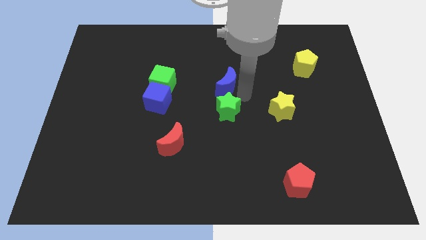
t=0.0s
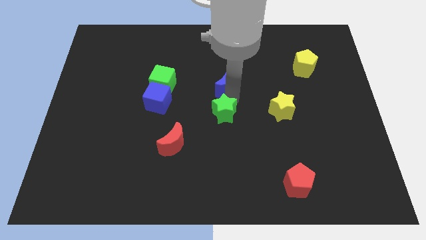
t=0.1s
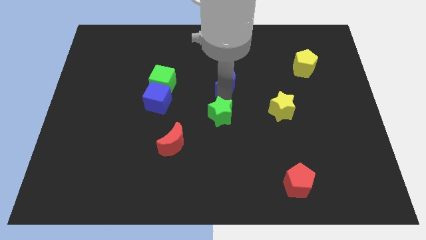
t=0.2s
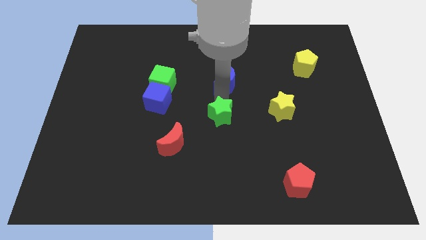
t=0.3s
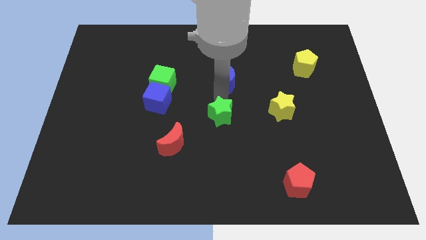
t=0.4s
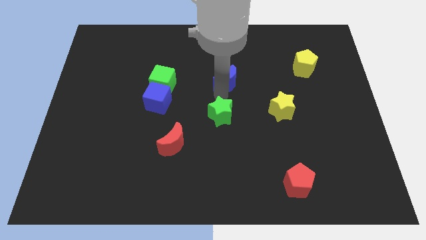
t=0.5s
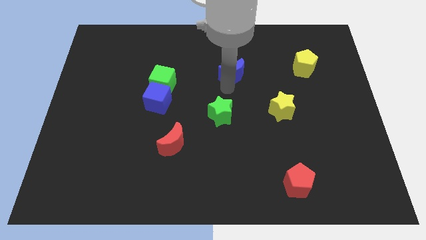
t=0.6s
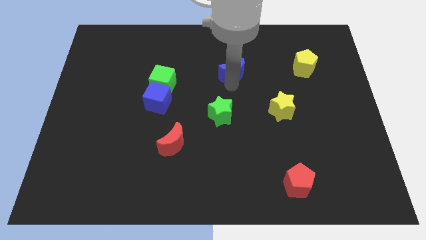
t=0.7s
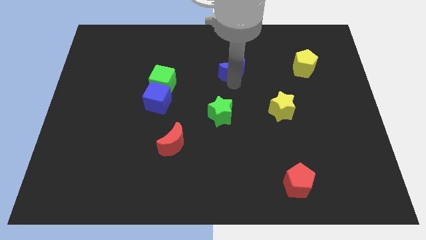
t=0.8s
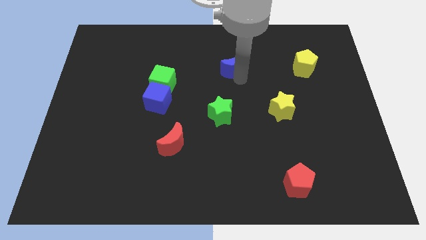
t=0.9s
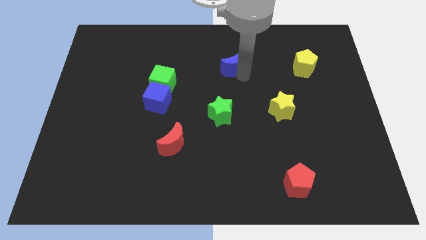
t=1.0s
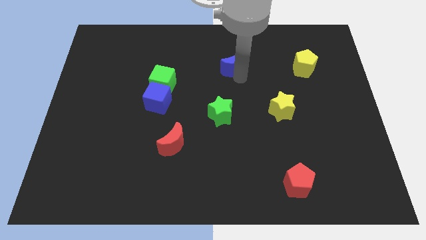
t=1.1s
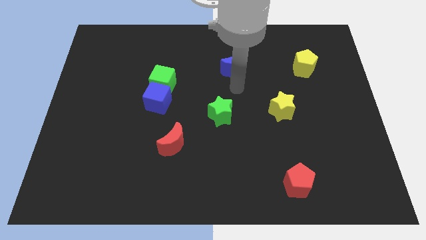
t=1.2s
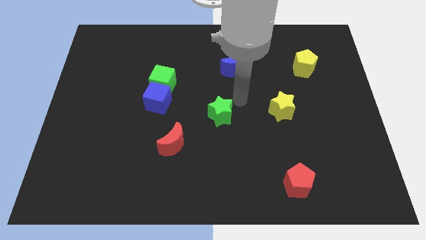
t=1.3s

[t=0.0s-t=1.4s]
separate the blue moon from the green star

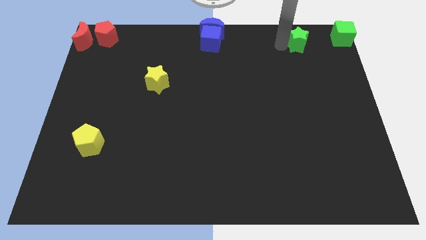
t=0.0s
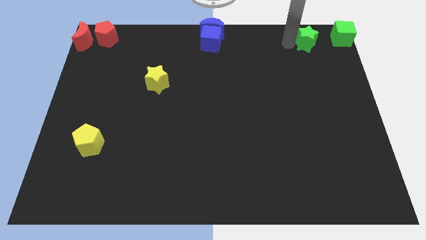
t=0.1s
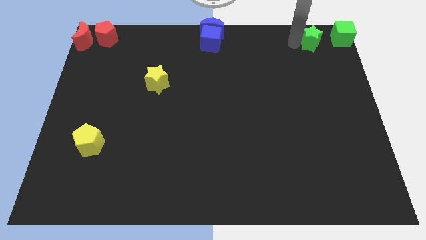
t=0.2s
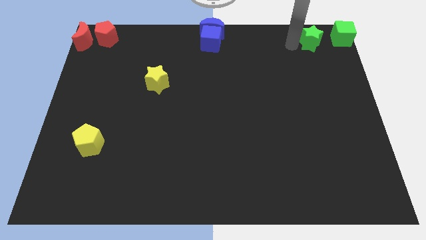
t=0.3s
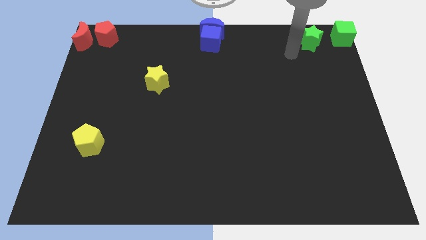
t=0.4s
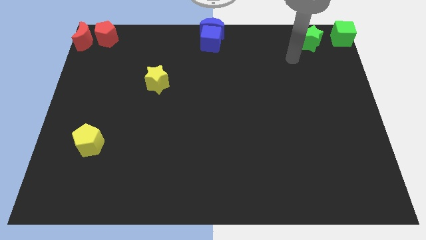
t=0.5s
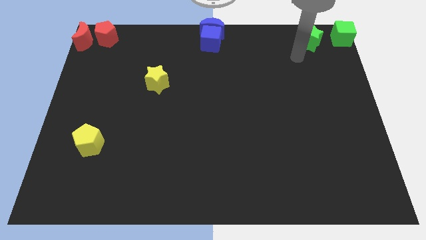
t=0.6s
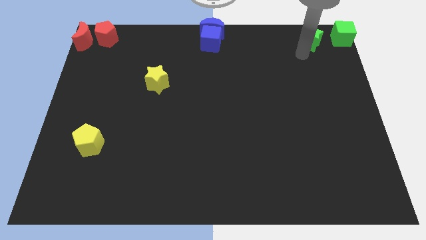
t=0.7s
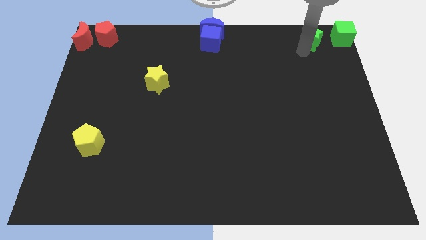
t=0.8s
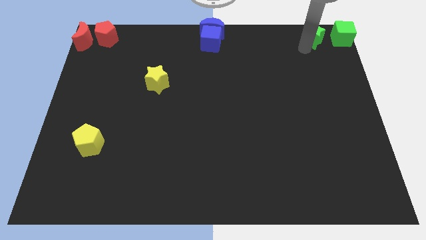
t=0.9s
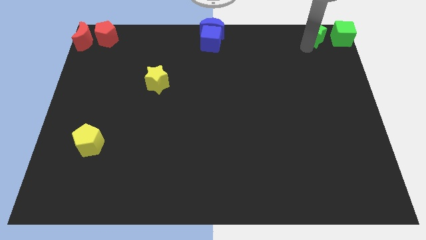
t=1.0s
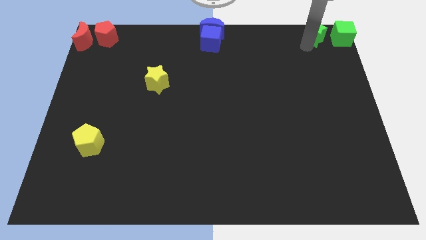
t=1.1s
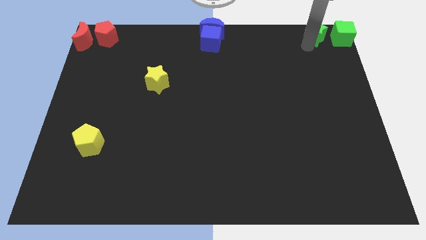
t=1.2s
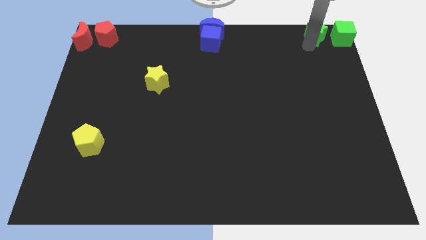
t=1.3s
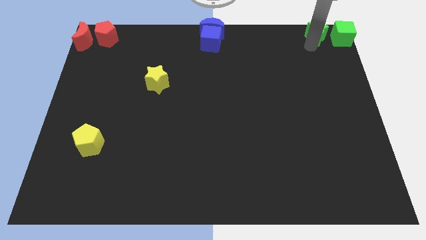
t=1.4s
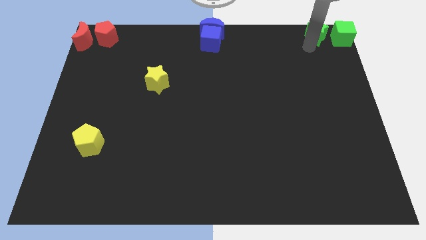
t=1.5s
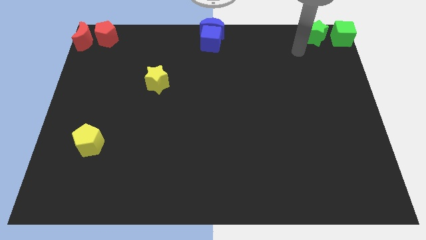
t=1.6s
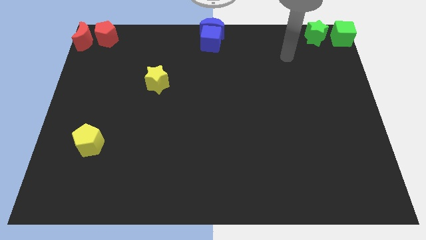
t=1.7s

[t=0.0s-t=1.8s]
push the green star near to the green cube

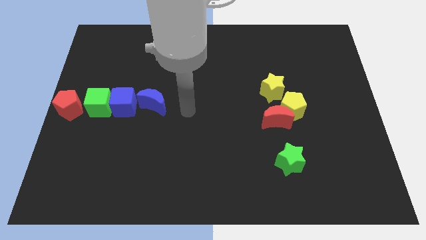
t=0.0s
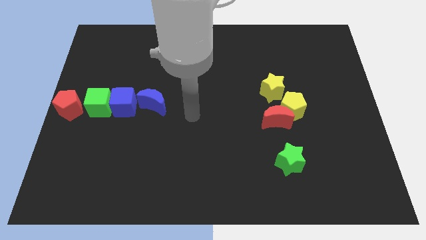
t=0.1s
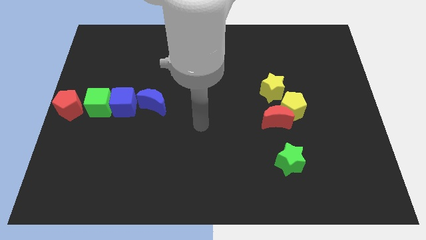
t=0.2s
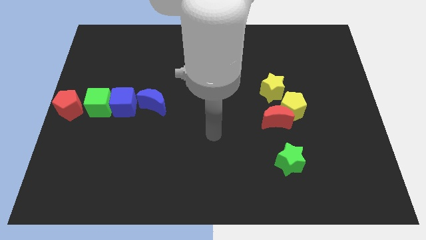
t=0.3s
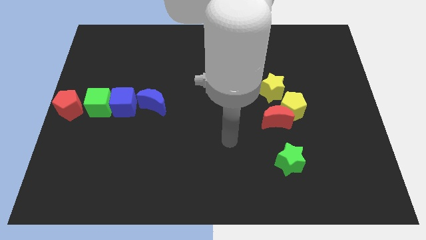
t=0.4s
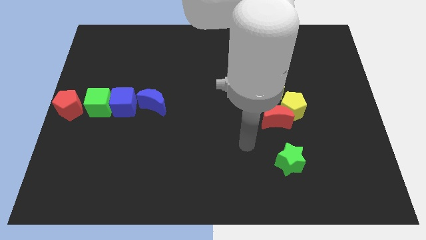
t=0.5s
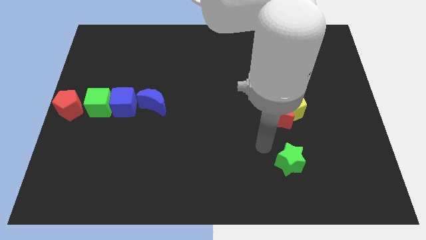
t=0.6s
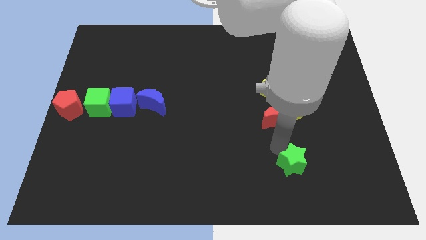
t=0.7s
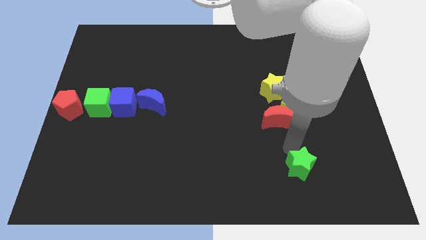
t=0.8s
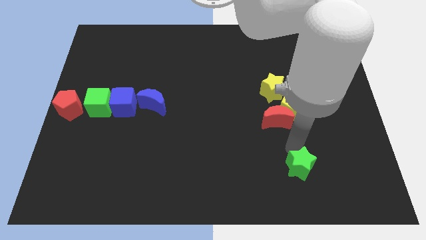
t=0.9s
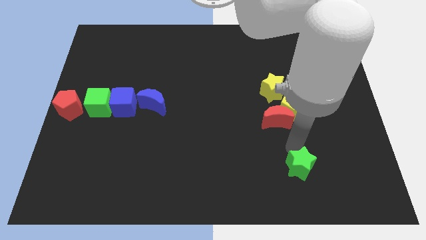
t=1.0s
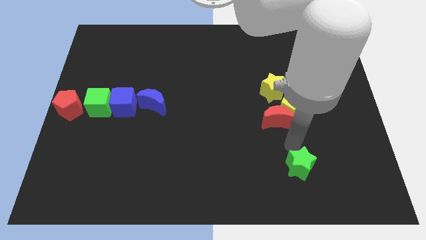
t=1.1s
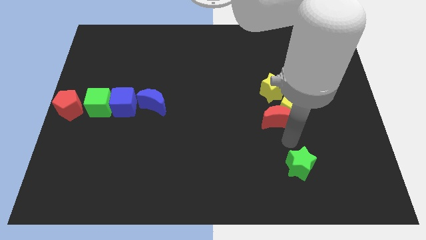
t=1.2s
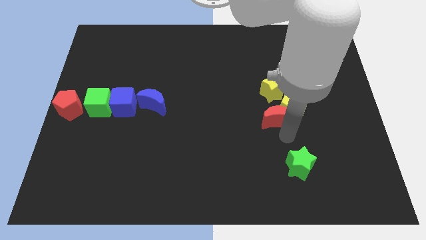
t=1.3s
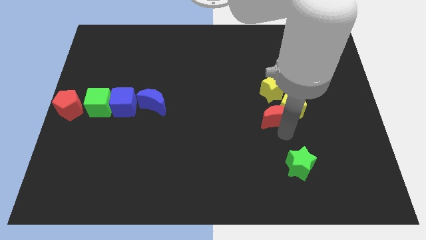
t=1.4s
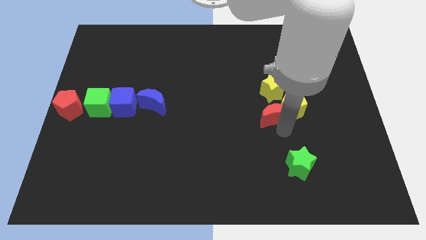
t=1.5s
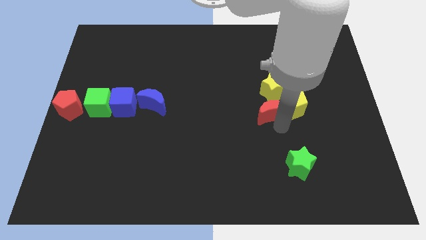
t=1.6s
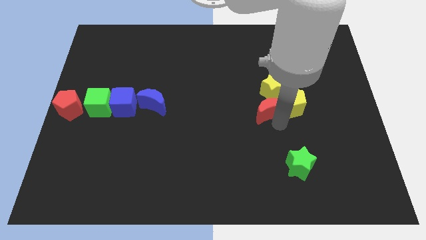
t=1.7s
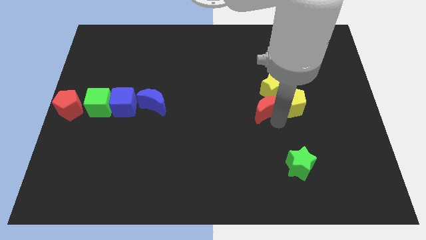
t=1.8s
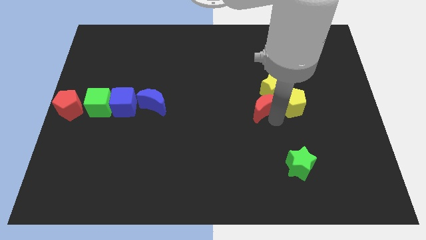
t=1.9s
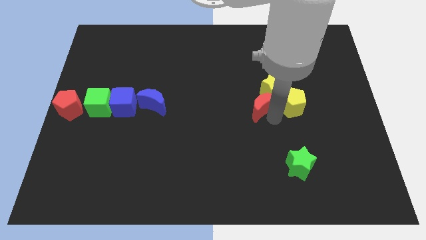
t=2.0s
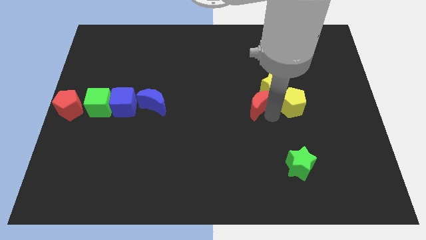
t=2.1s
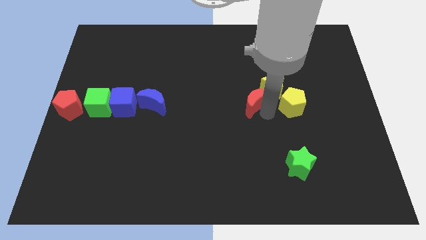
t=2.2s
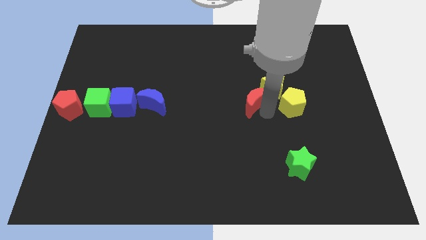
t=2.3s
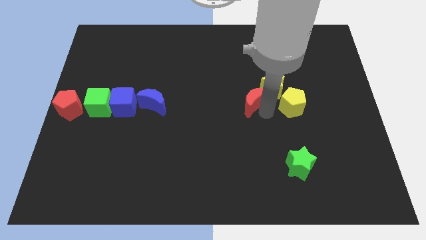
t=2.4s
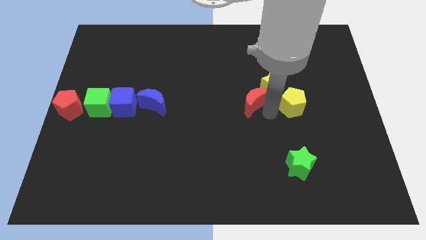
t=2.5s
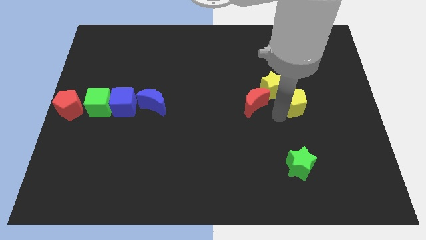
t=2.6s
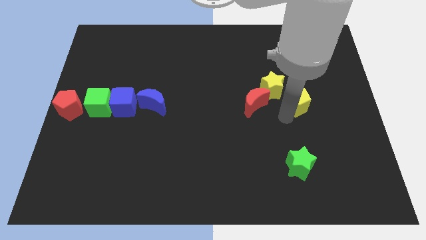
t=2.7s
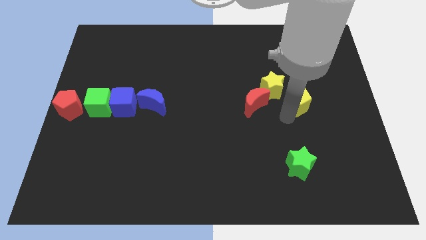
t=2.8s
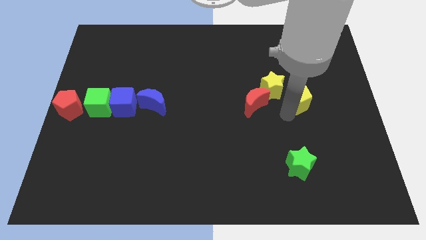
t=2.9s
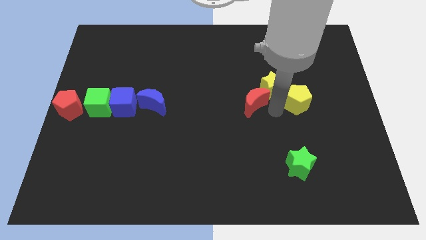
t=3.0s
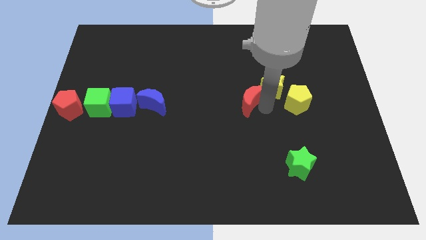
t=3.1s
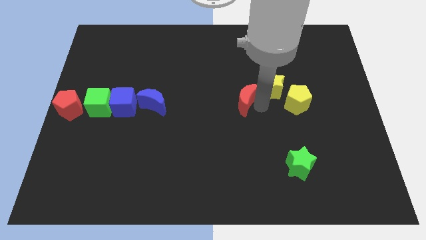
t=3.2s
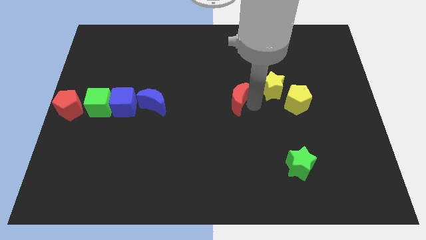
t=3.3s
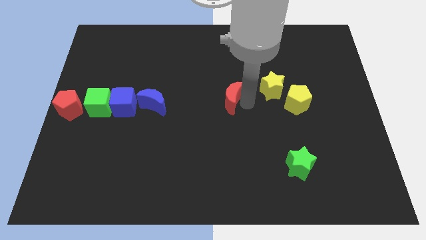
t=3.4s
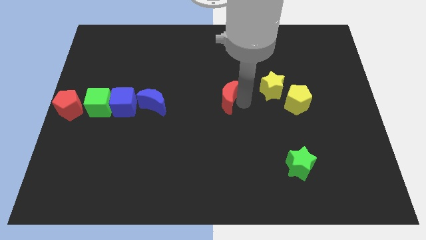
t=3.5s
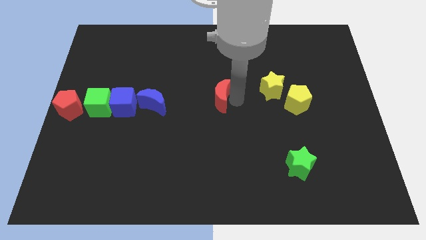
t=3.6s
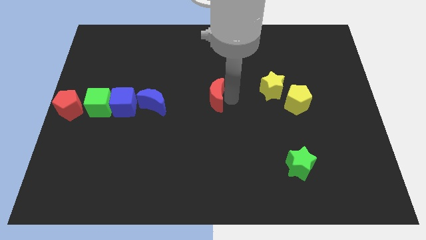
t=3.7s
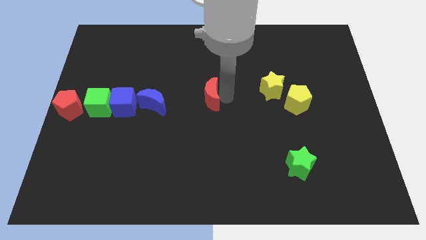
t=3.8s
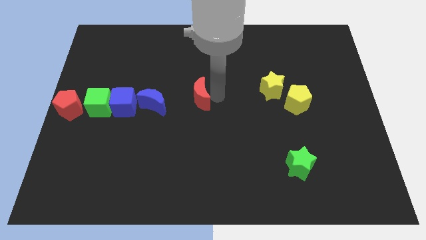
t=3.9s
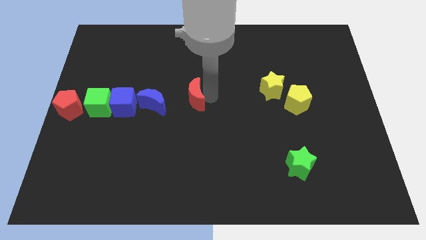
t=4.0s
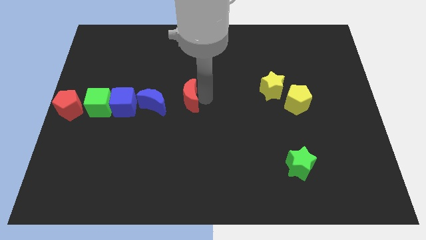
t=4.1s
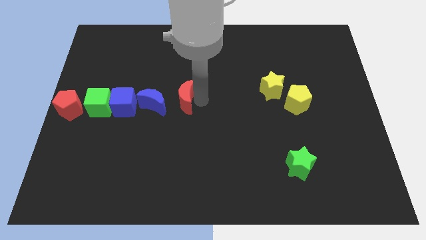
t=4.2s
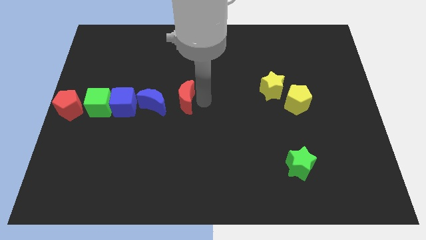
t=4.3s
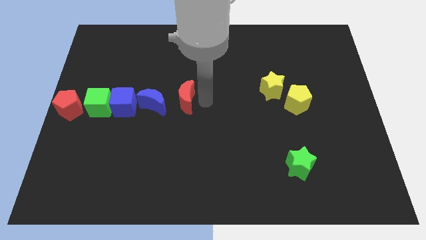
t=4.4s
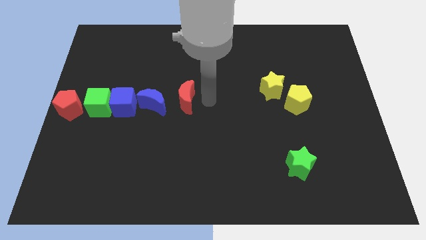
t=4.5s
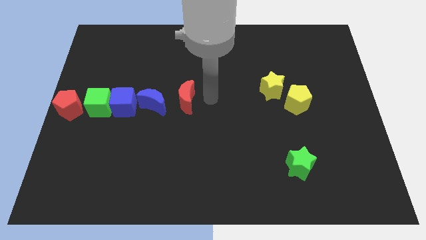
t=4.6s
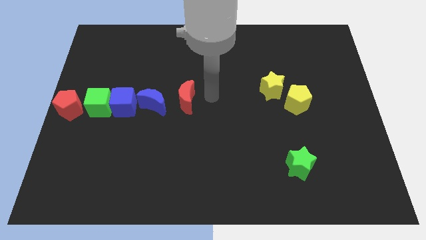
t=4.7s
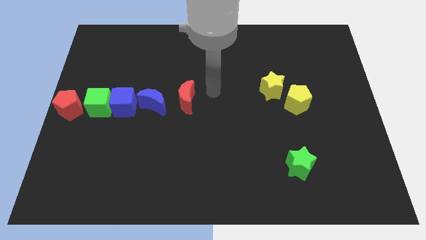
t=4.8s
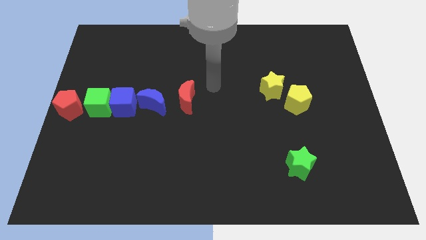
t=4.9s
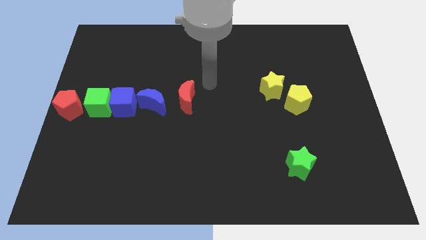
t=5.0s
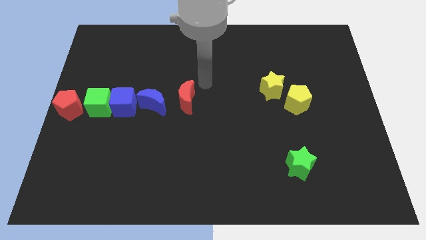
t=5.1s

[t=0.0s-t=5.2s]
push the red crescent to the right of the blue crescent

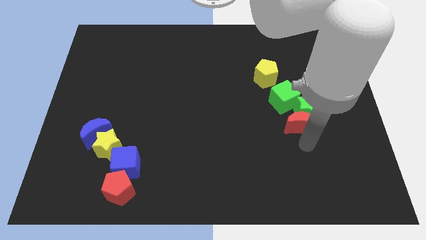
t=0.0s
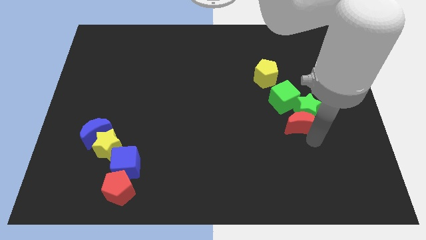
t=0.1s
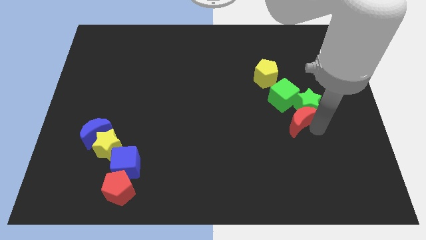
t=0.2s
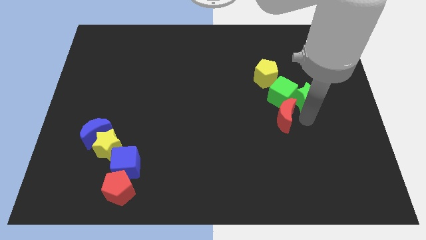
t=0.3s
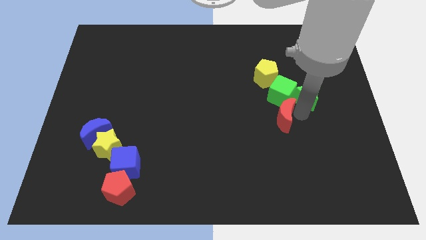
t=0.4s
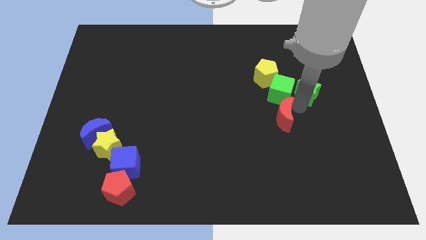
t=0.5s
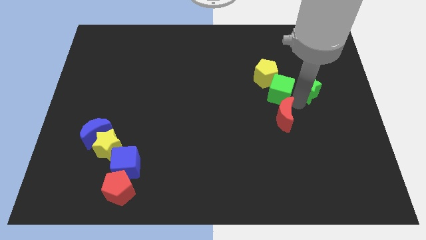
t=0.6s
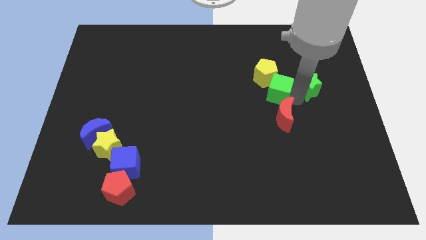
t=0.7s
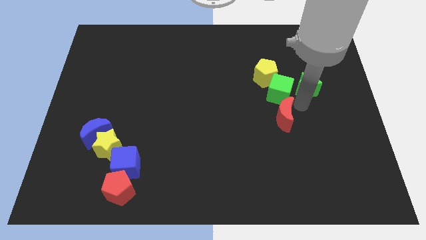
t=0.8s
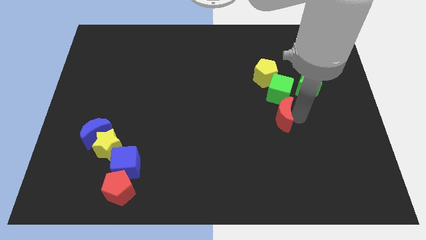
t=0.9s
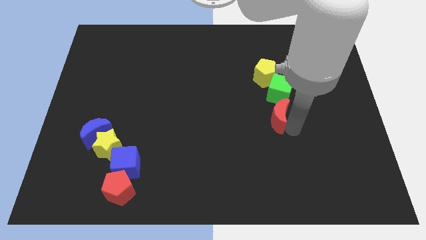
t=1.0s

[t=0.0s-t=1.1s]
push the red crescent to the bottom of the green cube
